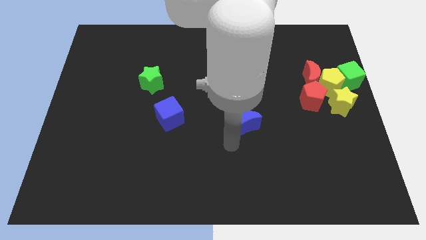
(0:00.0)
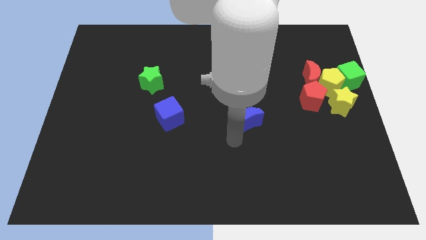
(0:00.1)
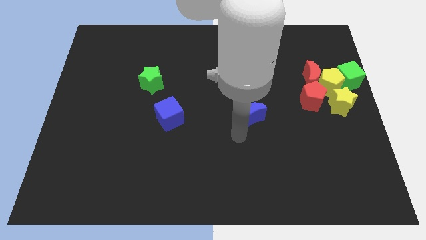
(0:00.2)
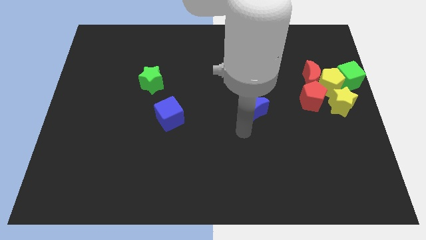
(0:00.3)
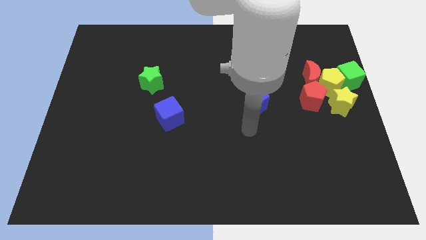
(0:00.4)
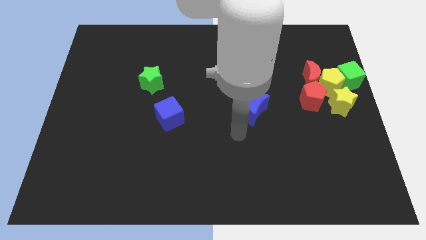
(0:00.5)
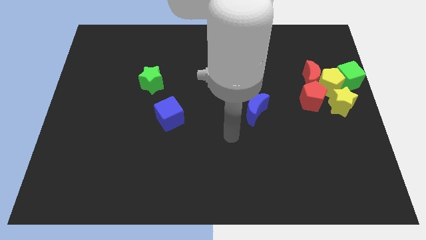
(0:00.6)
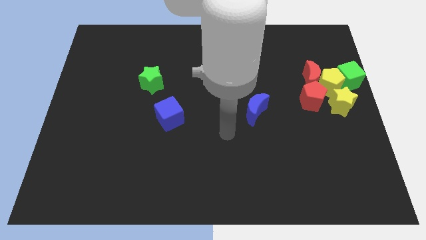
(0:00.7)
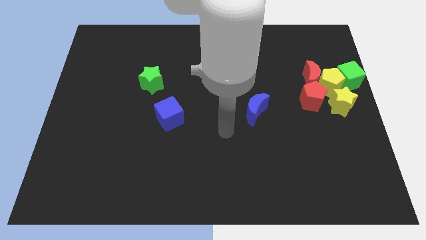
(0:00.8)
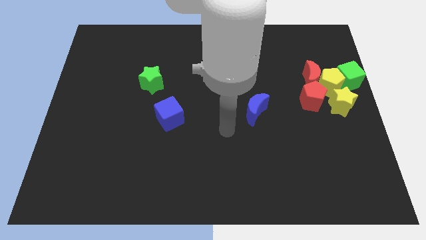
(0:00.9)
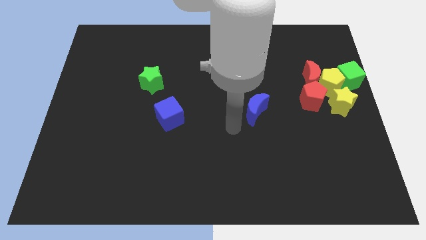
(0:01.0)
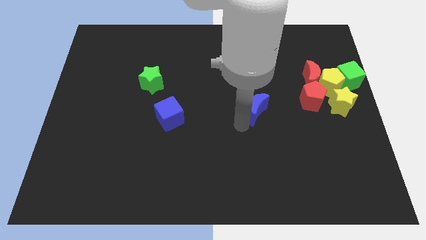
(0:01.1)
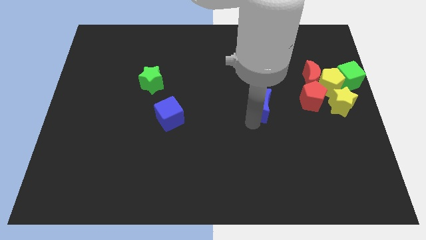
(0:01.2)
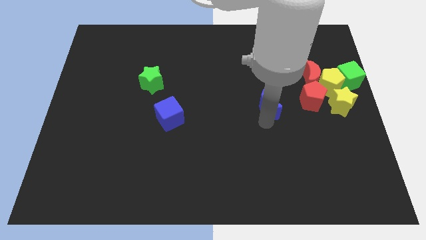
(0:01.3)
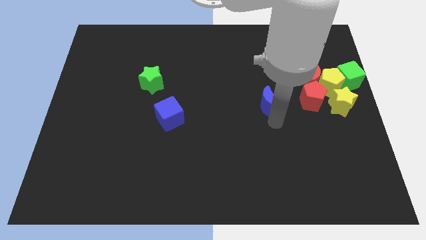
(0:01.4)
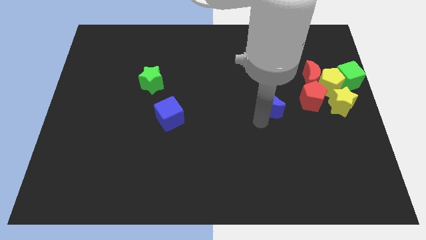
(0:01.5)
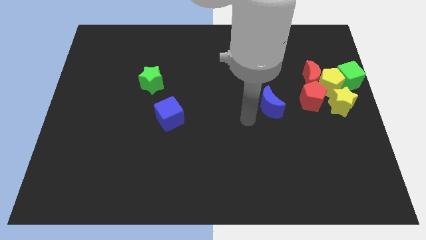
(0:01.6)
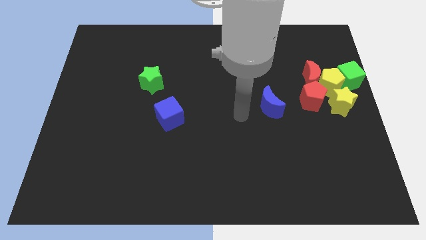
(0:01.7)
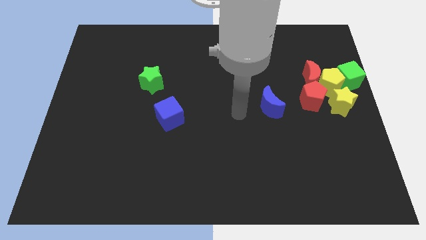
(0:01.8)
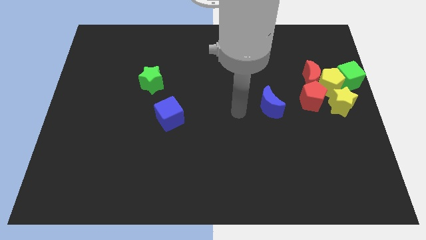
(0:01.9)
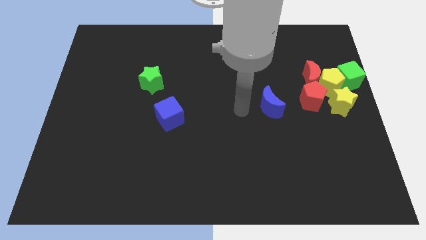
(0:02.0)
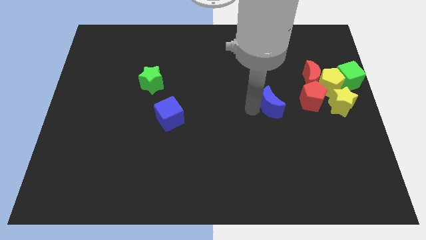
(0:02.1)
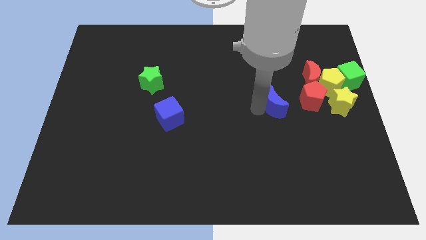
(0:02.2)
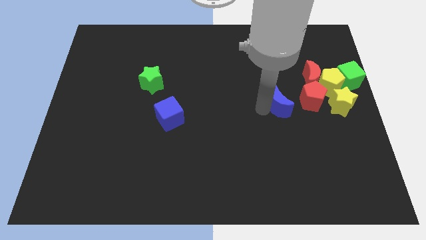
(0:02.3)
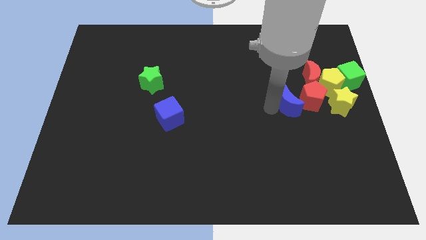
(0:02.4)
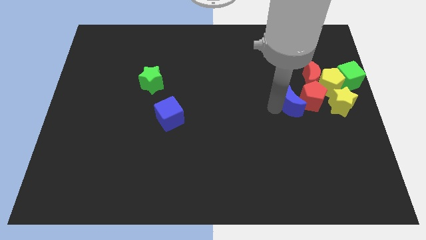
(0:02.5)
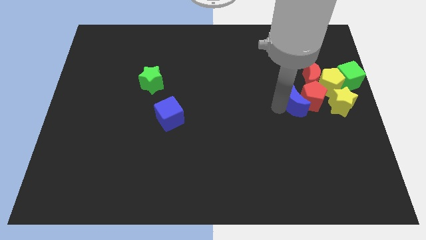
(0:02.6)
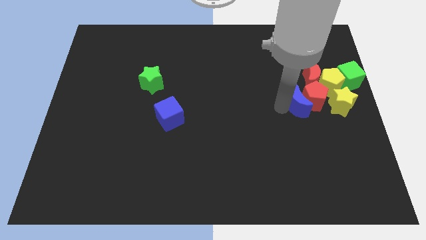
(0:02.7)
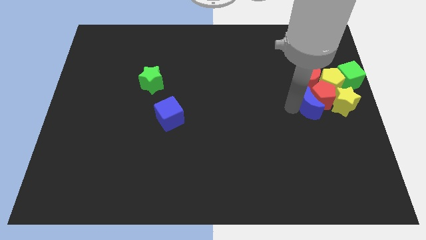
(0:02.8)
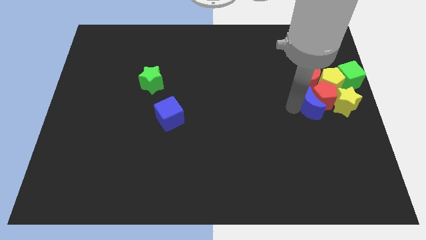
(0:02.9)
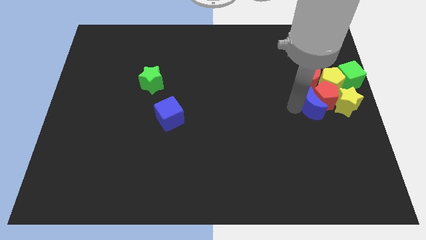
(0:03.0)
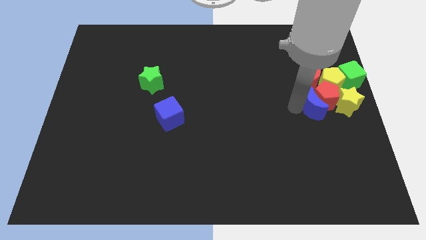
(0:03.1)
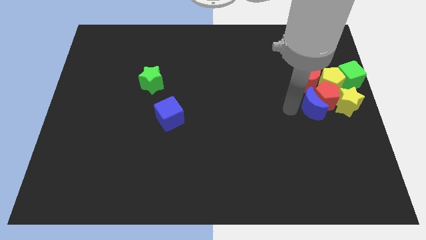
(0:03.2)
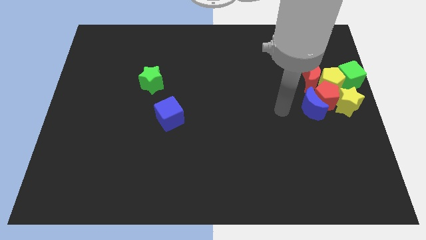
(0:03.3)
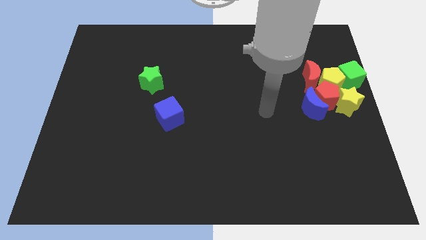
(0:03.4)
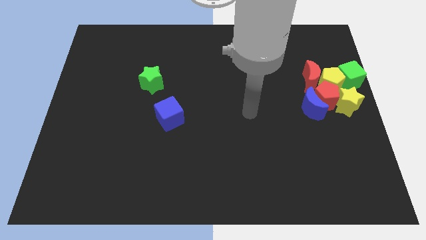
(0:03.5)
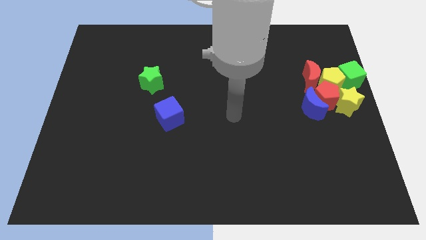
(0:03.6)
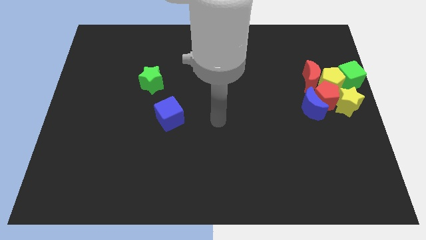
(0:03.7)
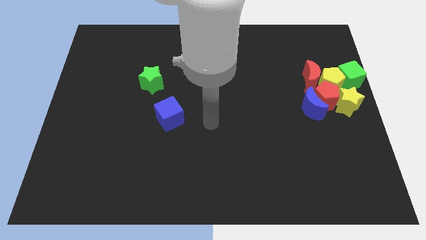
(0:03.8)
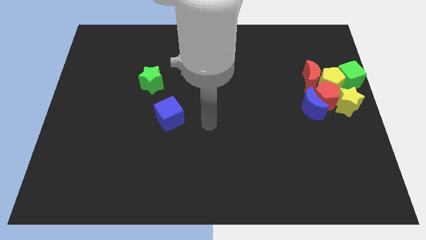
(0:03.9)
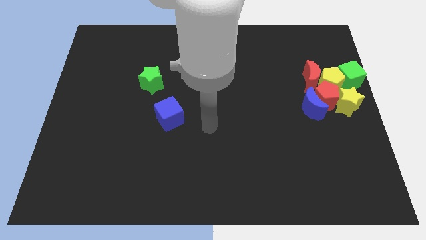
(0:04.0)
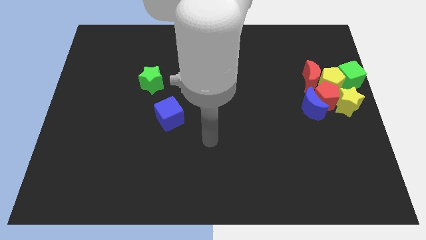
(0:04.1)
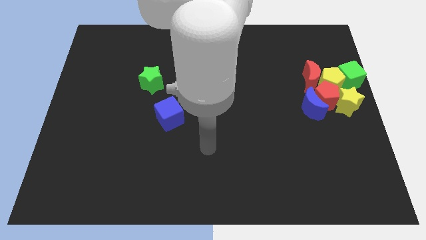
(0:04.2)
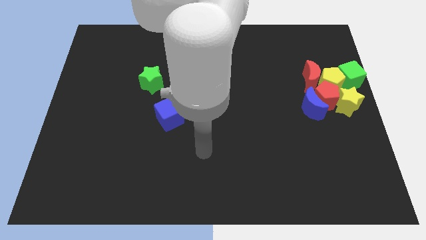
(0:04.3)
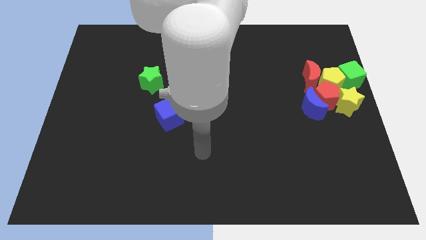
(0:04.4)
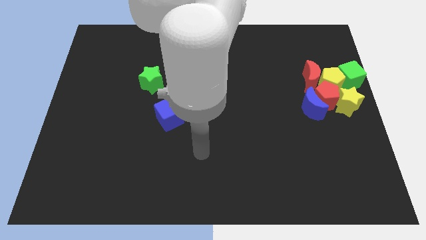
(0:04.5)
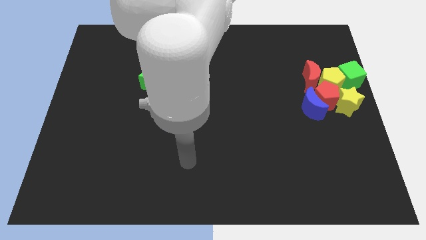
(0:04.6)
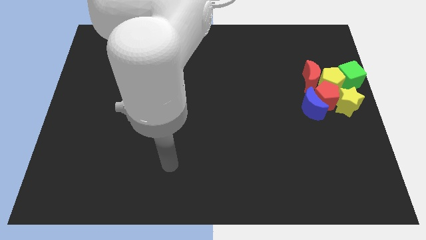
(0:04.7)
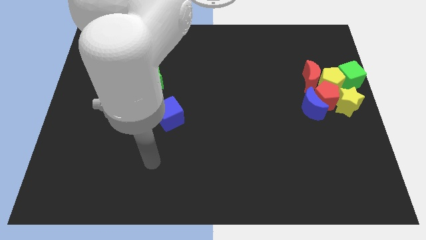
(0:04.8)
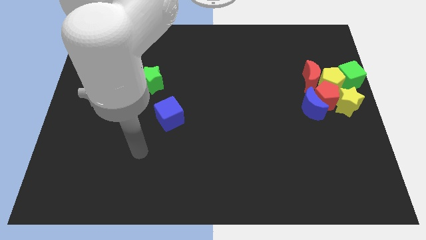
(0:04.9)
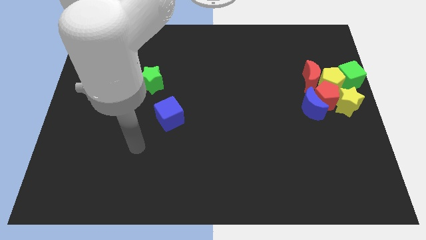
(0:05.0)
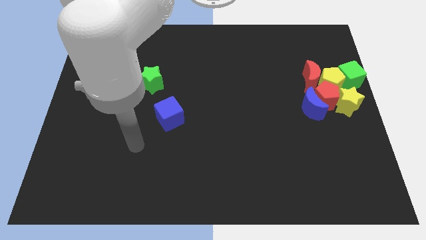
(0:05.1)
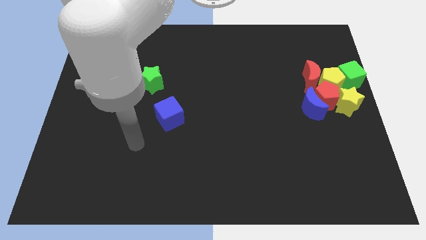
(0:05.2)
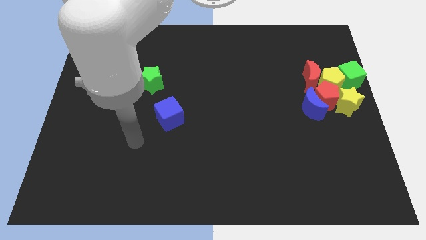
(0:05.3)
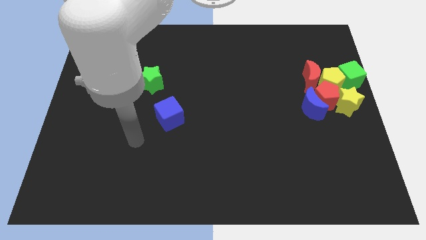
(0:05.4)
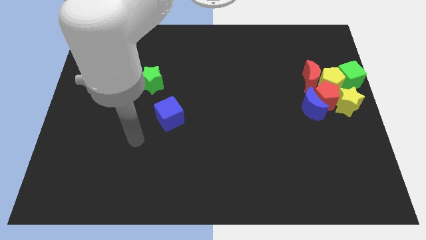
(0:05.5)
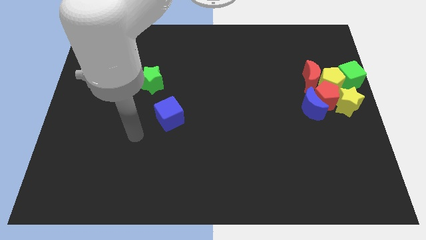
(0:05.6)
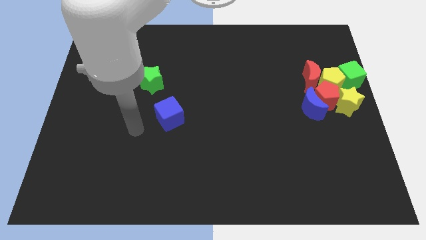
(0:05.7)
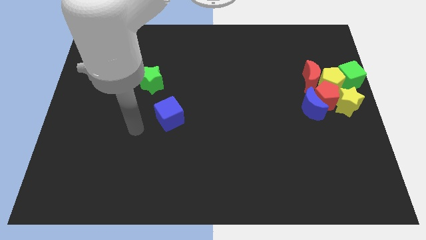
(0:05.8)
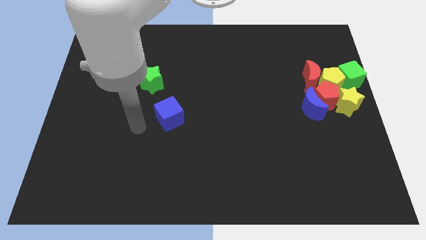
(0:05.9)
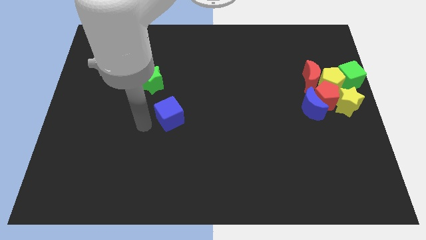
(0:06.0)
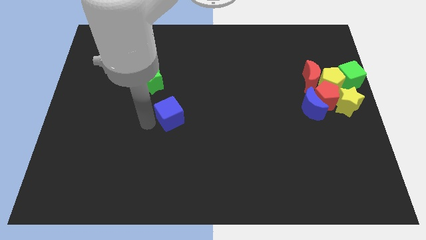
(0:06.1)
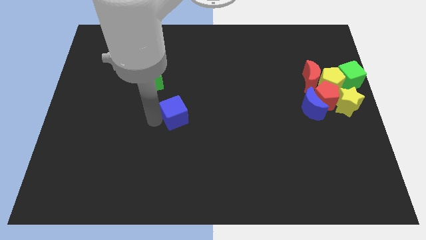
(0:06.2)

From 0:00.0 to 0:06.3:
move the blue moon into the group of blocks

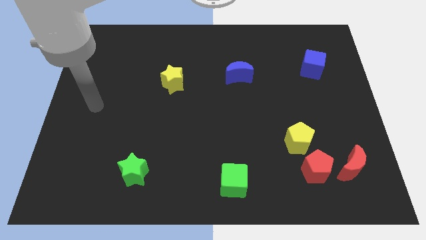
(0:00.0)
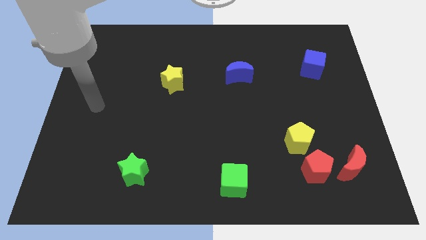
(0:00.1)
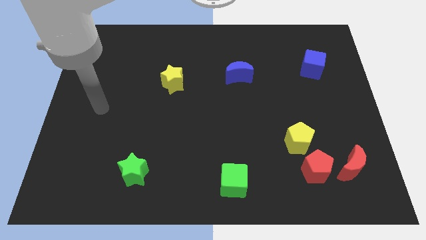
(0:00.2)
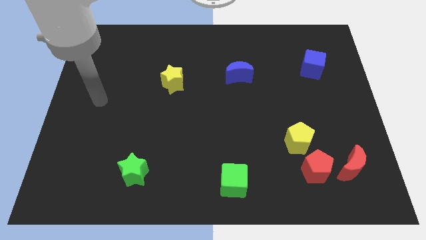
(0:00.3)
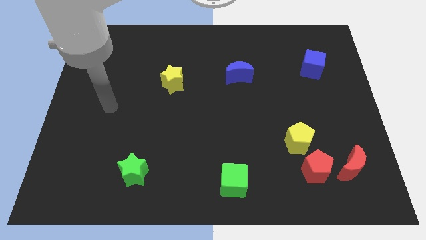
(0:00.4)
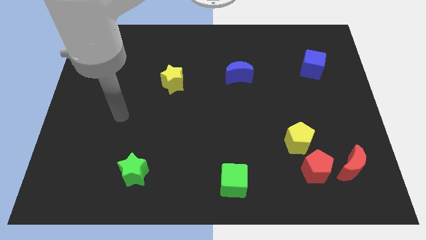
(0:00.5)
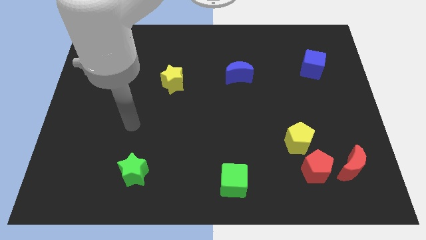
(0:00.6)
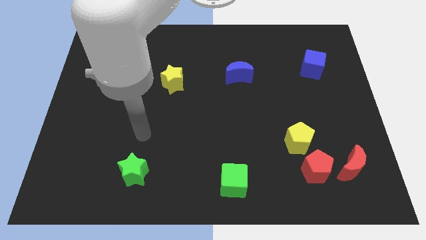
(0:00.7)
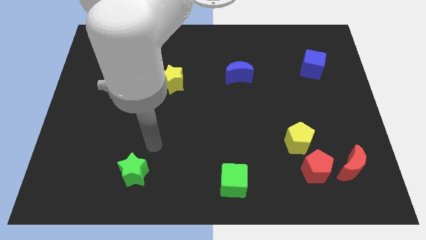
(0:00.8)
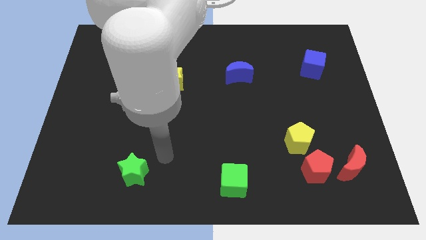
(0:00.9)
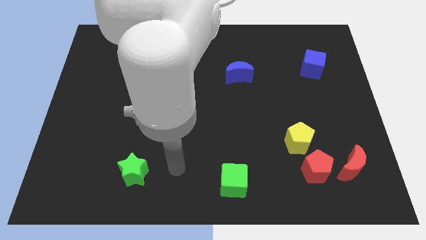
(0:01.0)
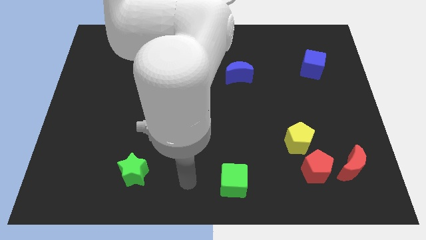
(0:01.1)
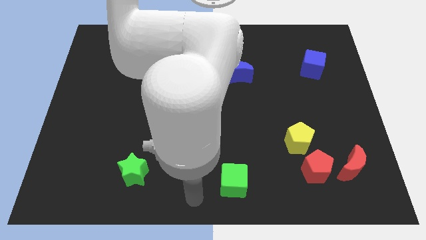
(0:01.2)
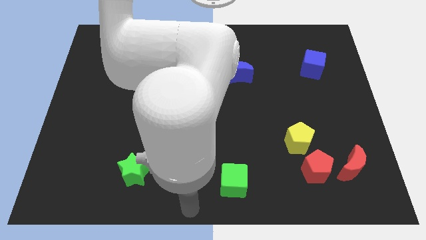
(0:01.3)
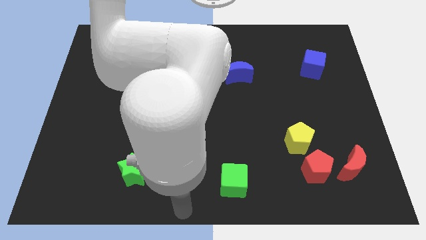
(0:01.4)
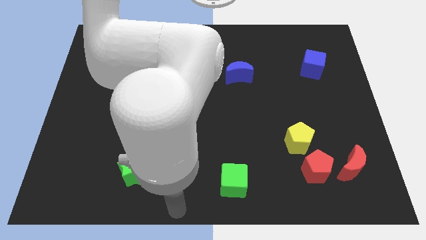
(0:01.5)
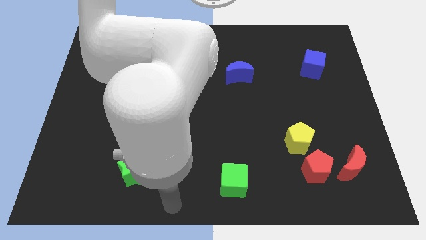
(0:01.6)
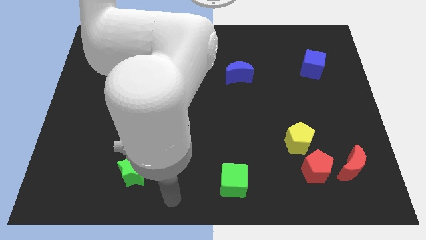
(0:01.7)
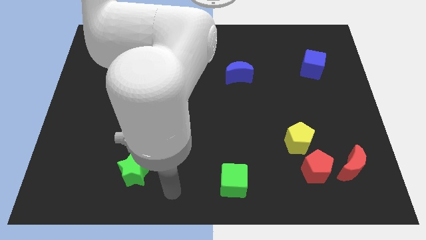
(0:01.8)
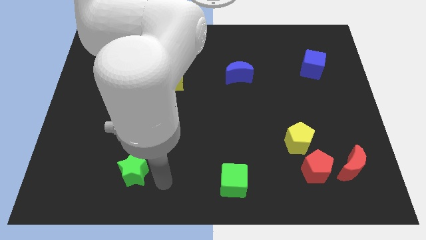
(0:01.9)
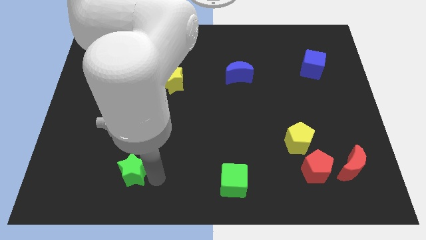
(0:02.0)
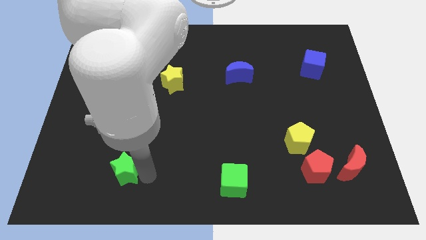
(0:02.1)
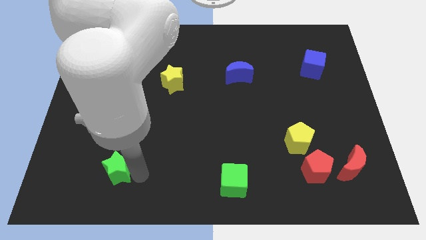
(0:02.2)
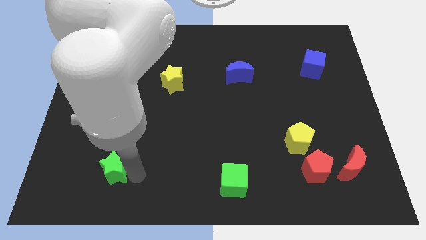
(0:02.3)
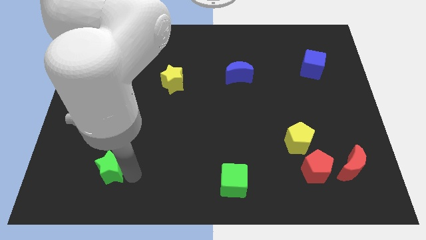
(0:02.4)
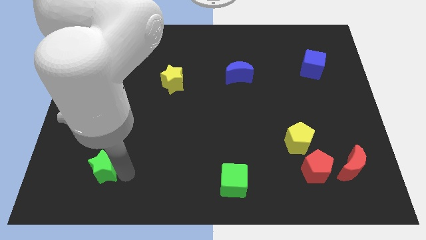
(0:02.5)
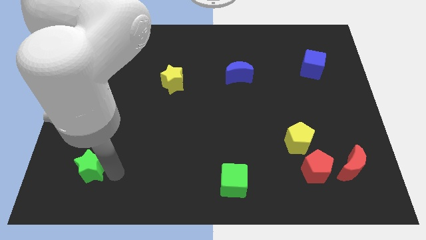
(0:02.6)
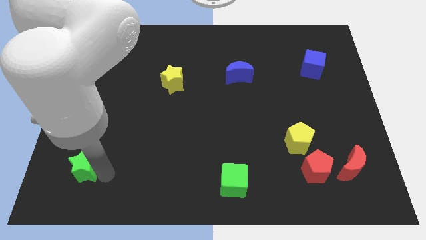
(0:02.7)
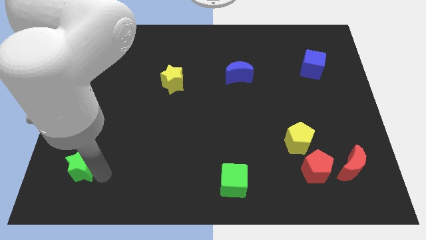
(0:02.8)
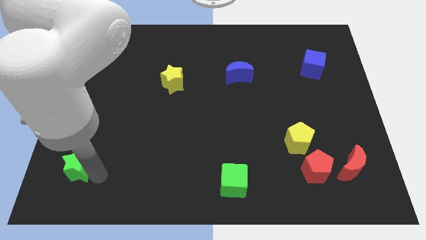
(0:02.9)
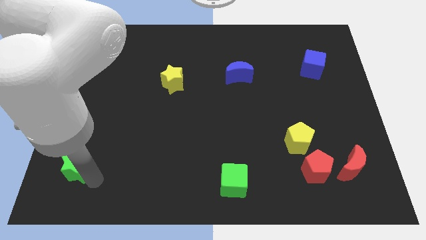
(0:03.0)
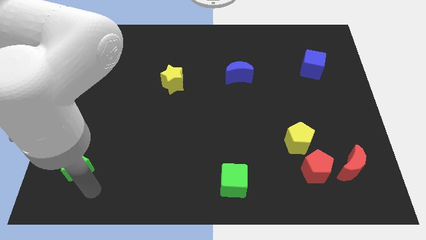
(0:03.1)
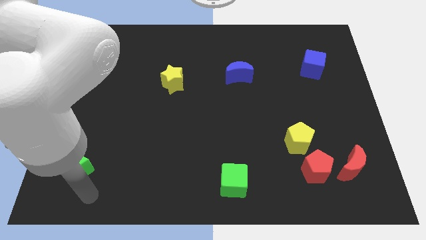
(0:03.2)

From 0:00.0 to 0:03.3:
push the green star to the bottom left of the yellow star
